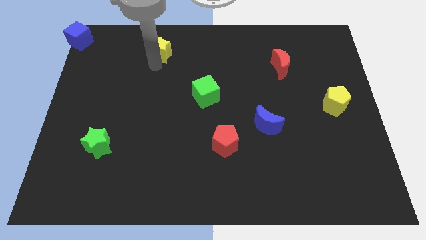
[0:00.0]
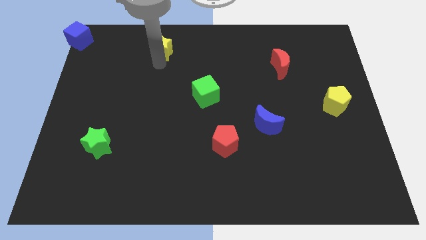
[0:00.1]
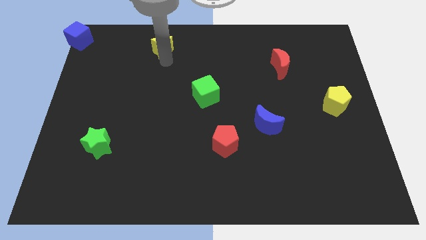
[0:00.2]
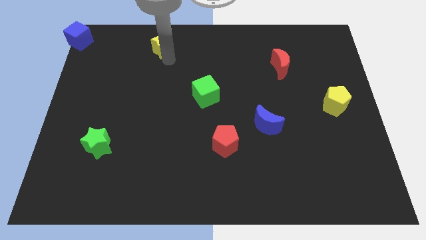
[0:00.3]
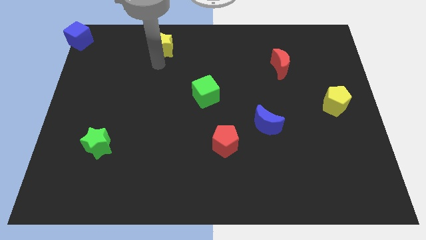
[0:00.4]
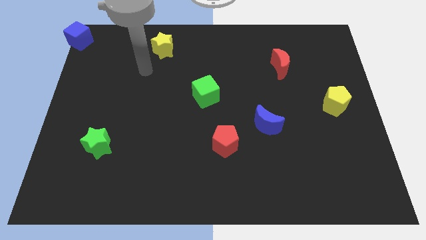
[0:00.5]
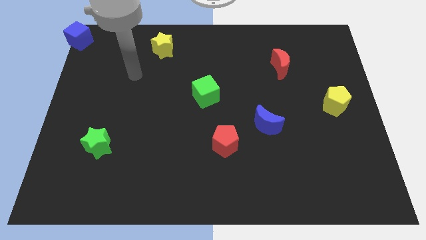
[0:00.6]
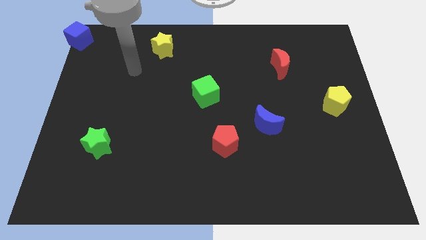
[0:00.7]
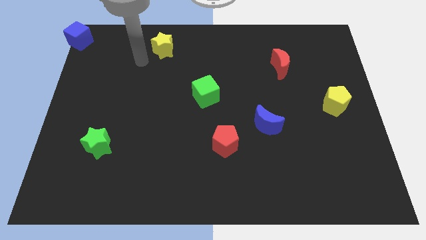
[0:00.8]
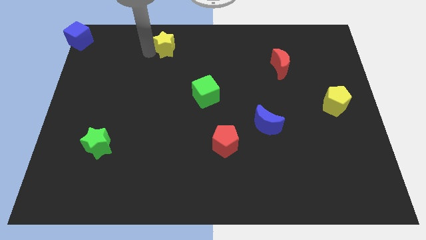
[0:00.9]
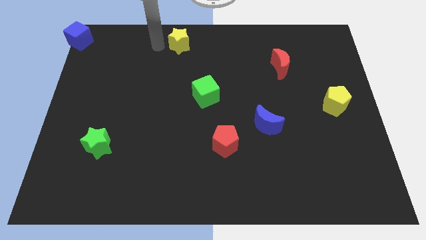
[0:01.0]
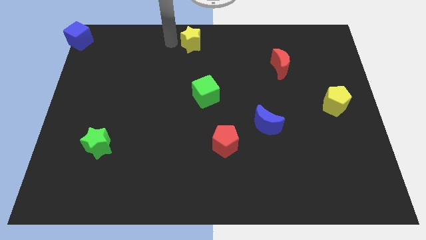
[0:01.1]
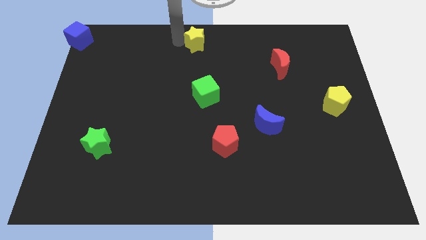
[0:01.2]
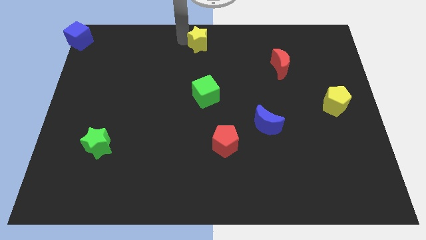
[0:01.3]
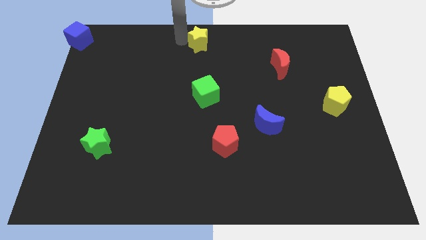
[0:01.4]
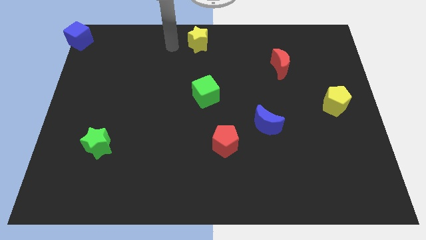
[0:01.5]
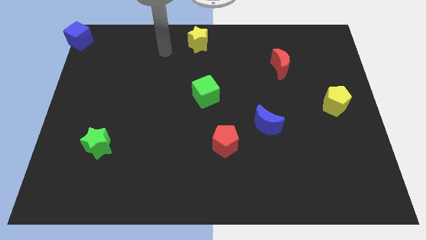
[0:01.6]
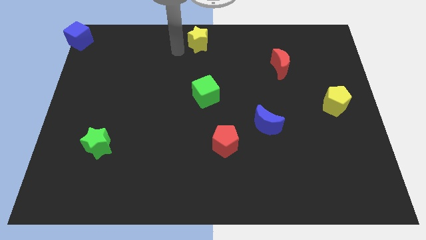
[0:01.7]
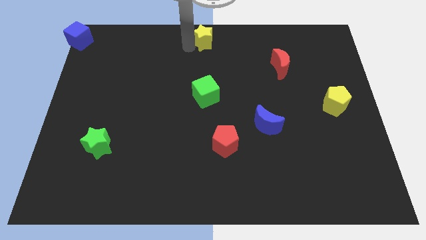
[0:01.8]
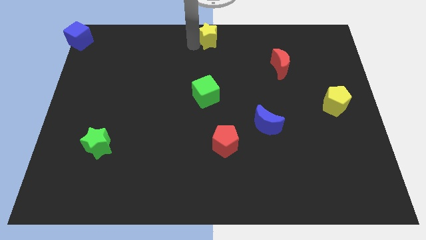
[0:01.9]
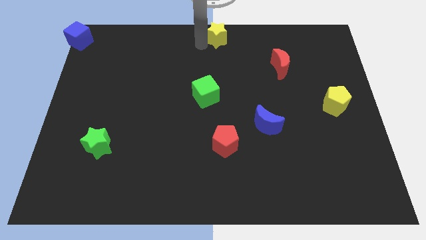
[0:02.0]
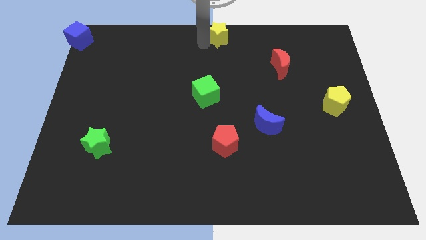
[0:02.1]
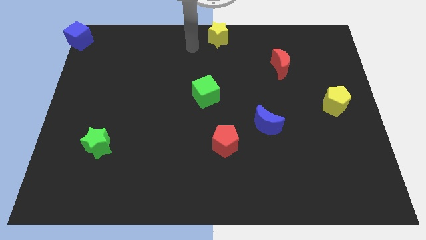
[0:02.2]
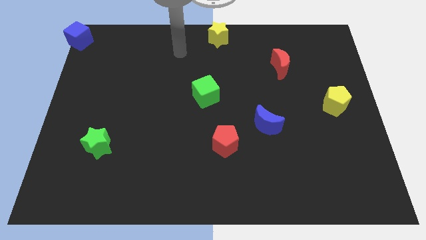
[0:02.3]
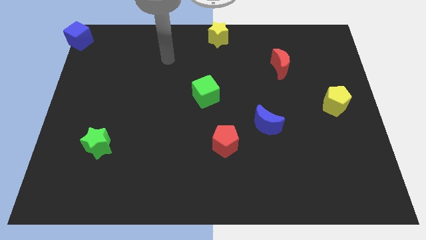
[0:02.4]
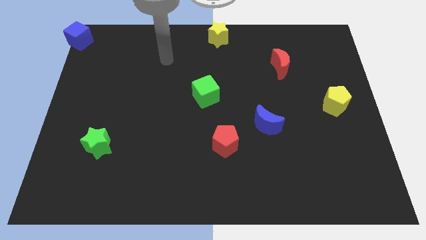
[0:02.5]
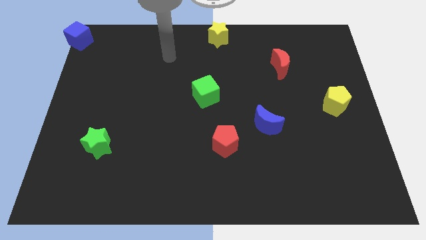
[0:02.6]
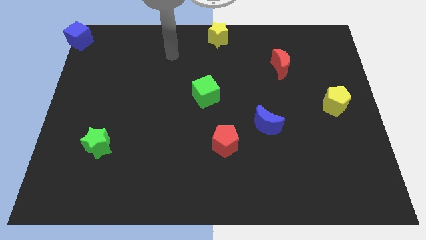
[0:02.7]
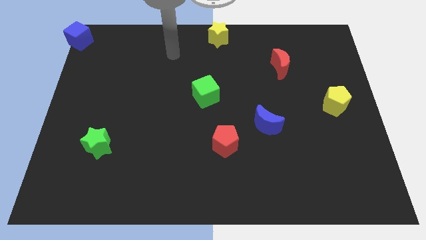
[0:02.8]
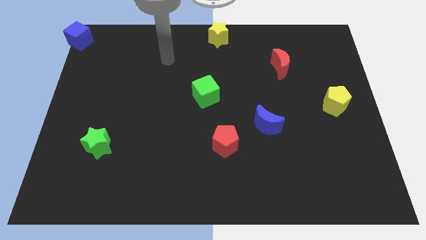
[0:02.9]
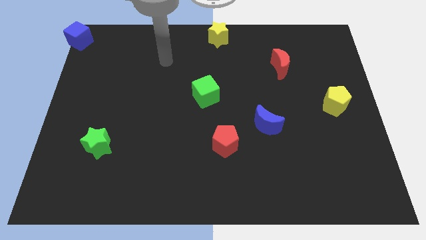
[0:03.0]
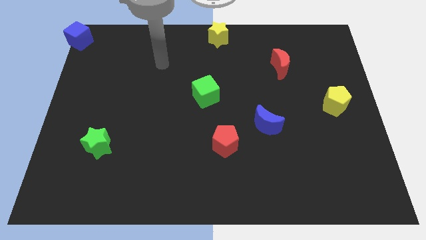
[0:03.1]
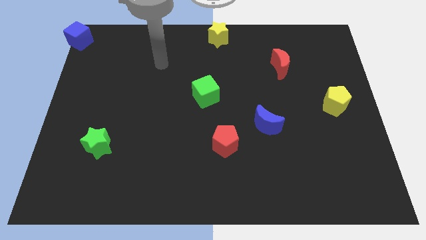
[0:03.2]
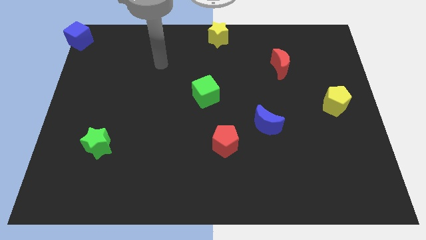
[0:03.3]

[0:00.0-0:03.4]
move the yellow star at the top center of the board

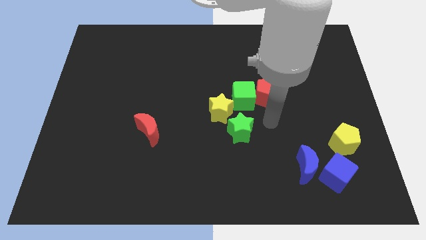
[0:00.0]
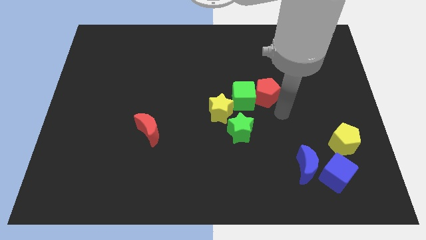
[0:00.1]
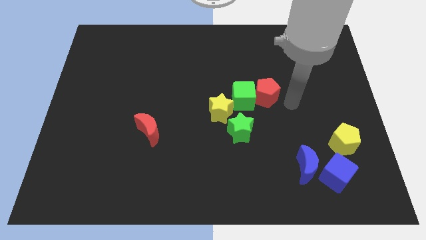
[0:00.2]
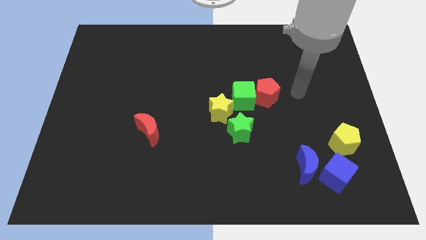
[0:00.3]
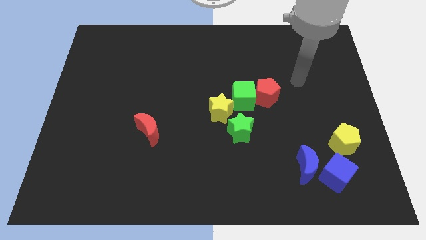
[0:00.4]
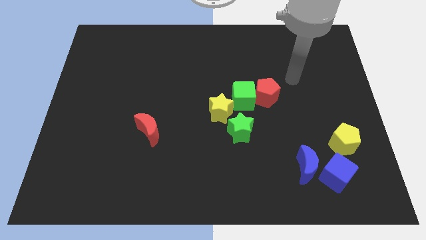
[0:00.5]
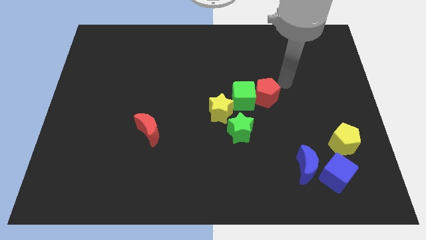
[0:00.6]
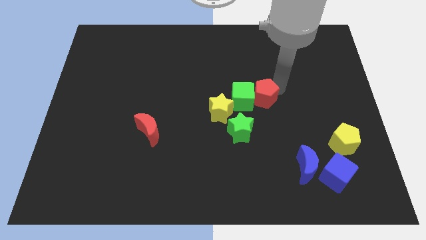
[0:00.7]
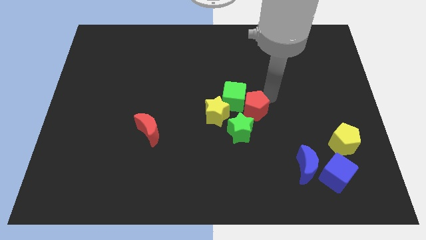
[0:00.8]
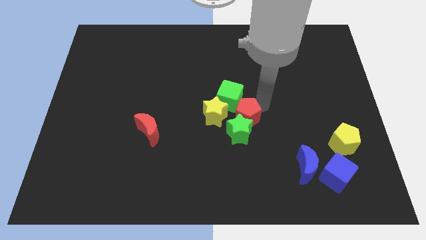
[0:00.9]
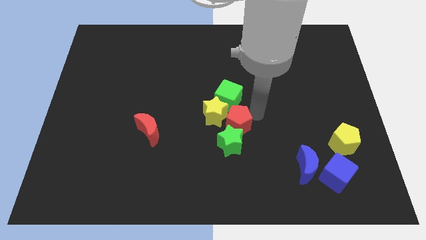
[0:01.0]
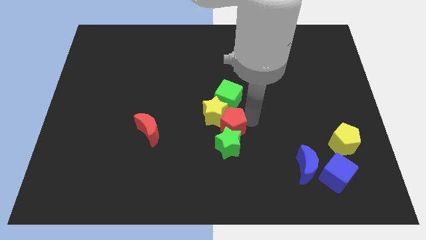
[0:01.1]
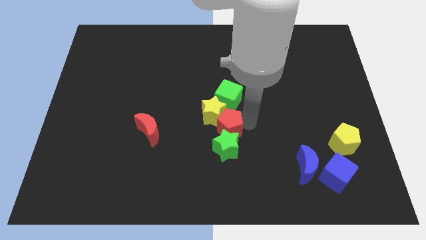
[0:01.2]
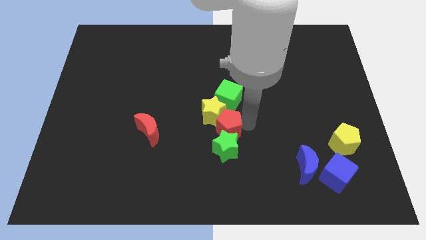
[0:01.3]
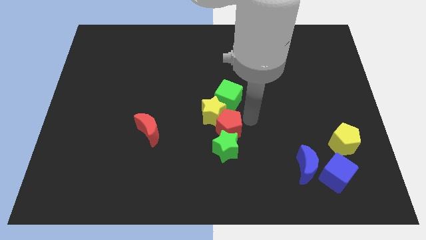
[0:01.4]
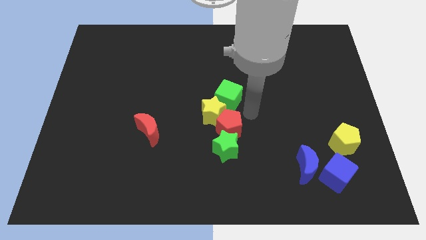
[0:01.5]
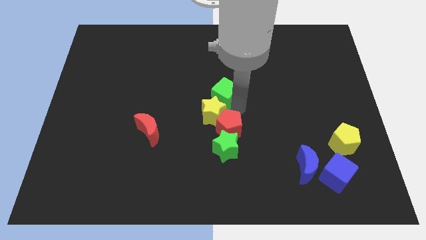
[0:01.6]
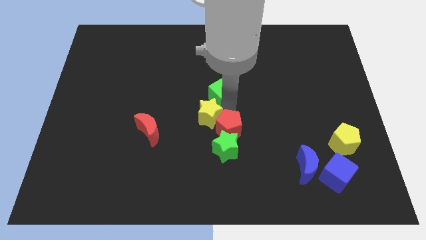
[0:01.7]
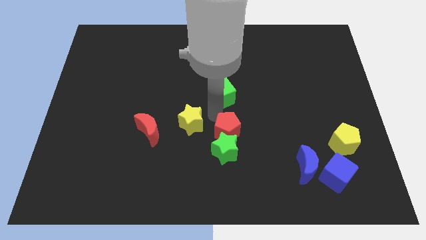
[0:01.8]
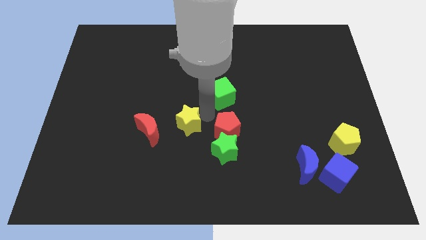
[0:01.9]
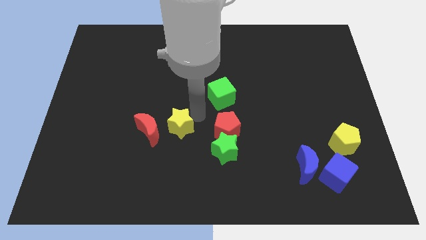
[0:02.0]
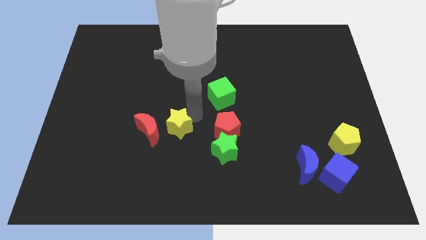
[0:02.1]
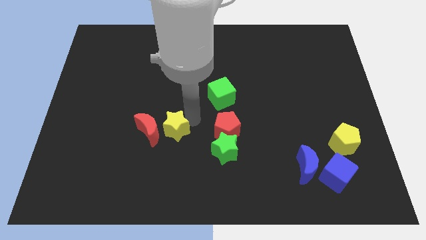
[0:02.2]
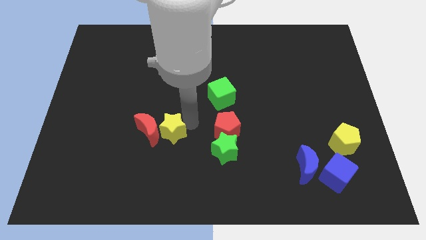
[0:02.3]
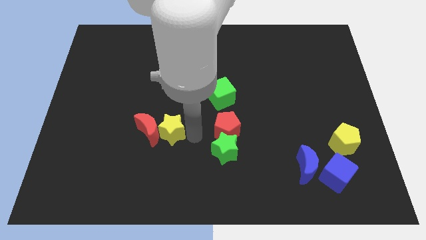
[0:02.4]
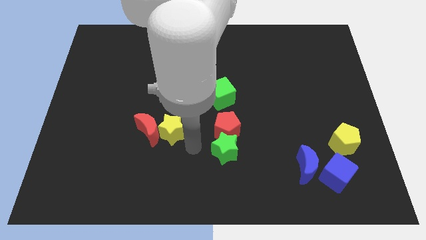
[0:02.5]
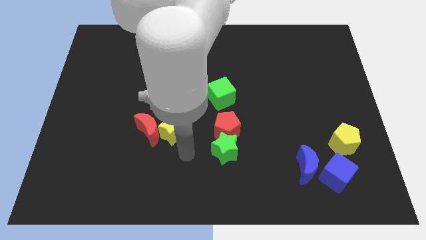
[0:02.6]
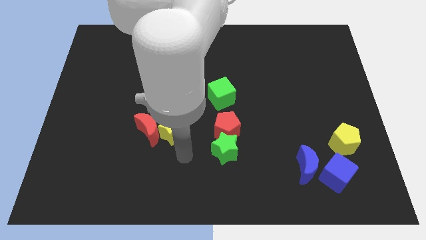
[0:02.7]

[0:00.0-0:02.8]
make a vertical line with the green cube red pentagon and green star by separating the yellow star

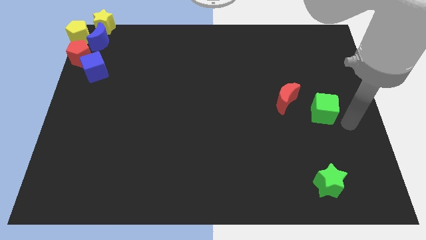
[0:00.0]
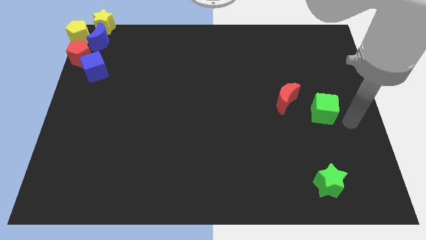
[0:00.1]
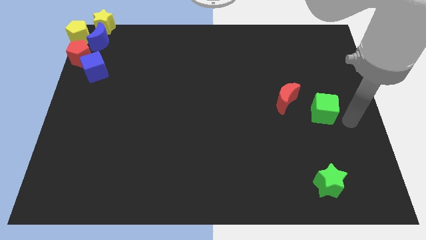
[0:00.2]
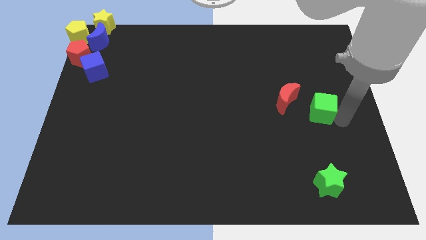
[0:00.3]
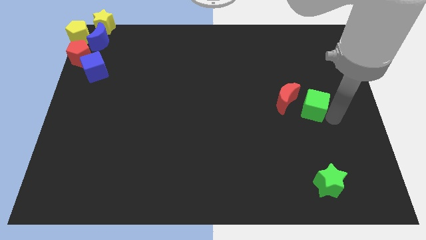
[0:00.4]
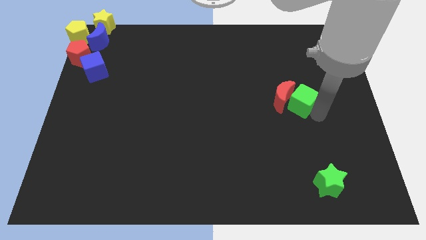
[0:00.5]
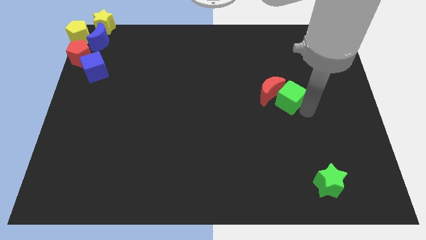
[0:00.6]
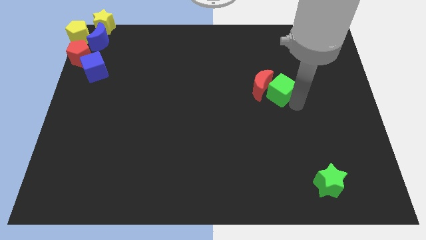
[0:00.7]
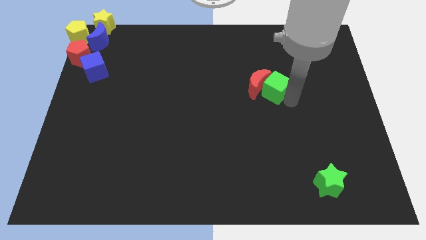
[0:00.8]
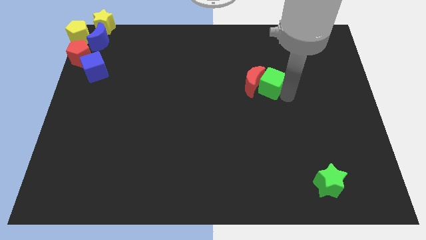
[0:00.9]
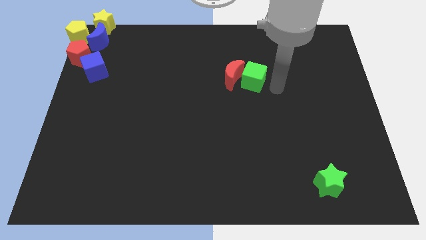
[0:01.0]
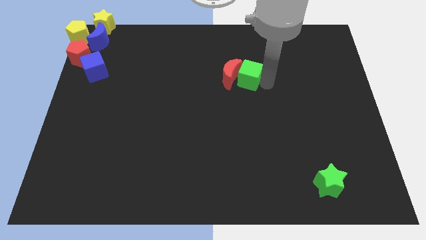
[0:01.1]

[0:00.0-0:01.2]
push green cube into red moon

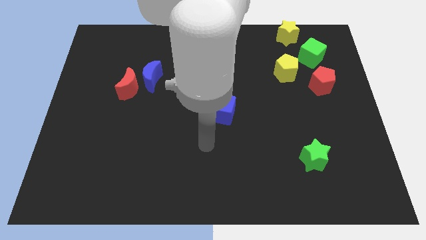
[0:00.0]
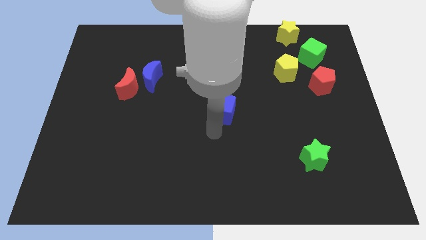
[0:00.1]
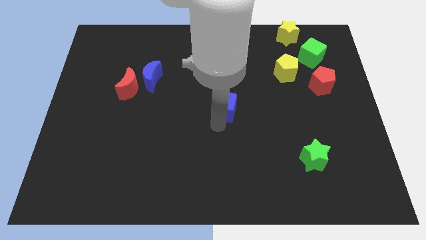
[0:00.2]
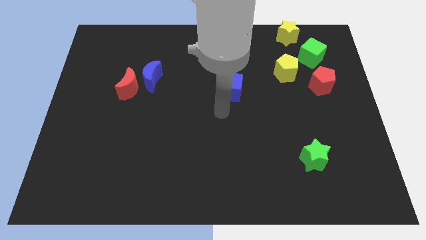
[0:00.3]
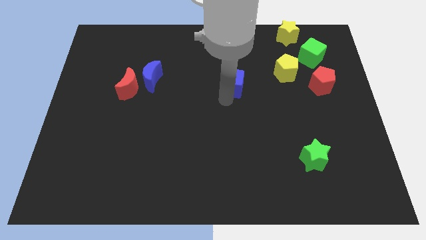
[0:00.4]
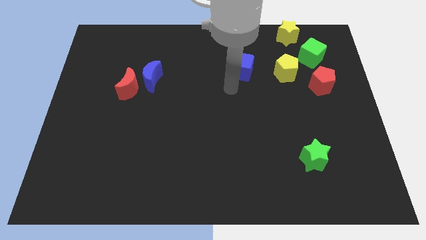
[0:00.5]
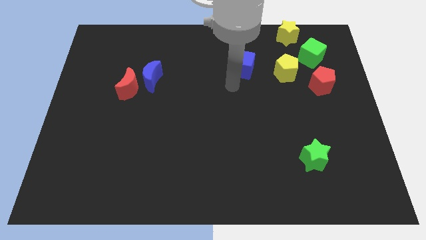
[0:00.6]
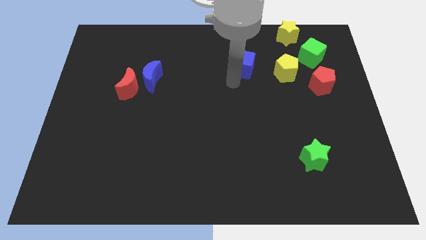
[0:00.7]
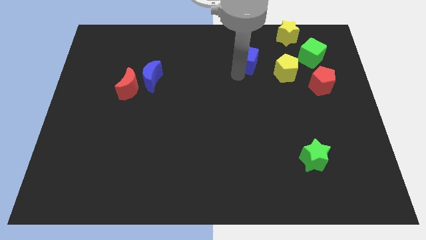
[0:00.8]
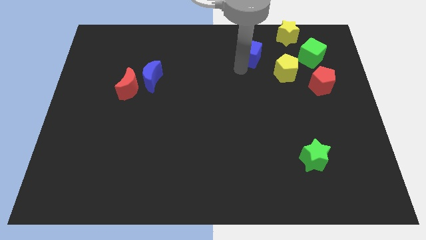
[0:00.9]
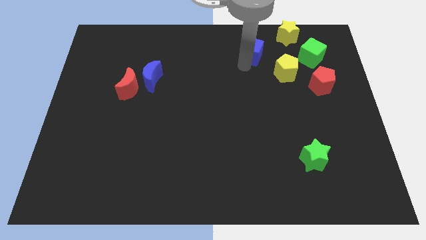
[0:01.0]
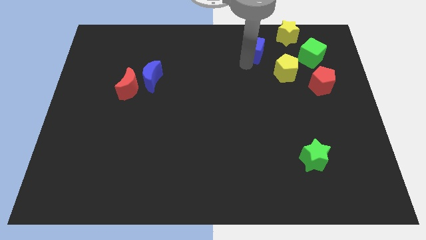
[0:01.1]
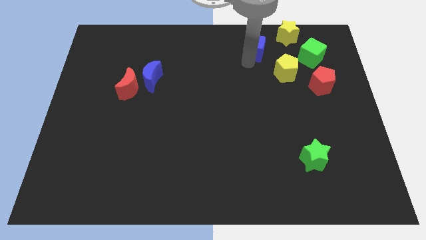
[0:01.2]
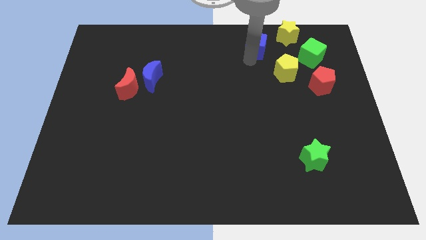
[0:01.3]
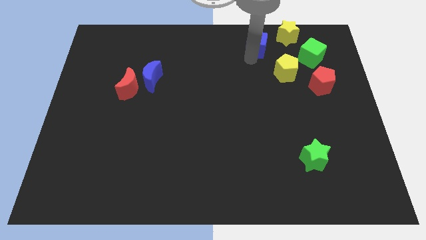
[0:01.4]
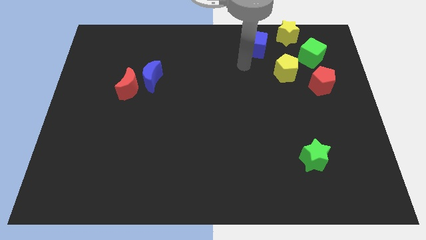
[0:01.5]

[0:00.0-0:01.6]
push the blue cube to the bottom left of the yellow star
